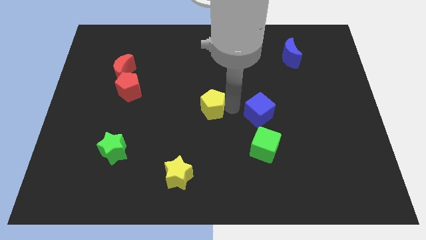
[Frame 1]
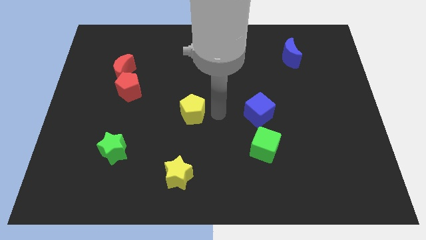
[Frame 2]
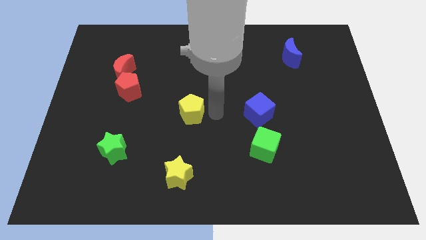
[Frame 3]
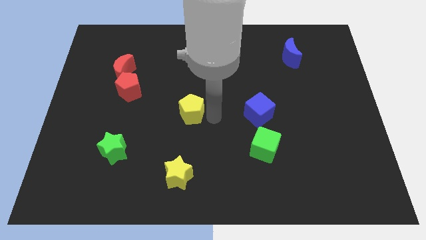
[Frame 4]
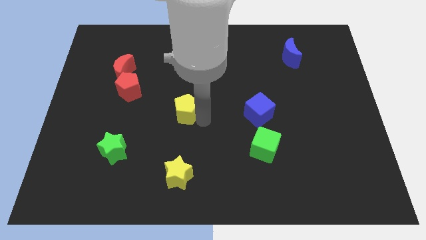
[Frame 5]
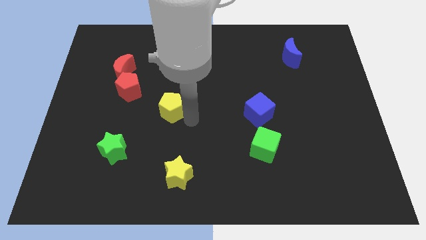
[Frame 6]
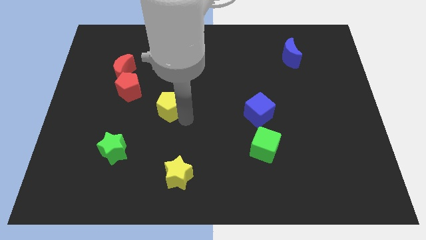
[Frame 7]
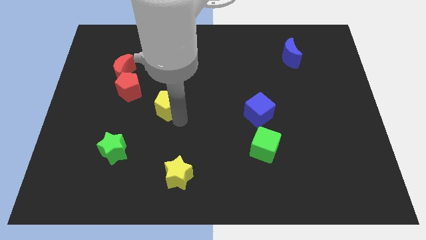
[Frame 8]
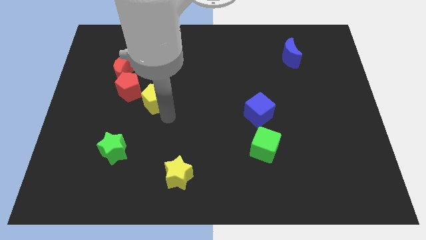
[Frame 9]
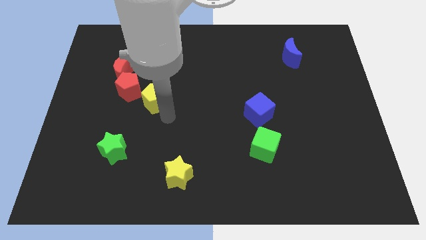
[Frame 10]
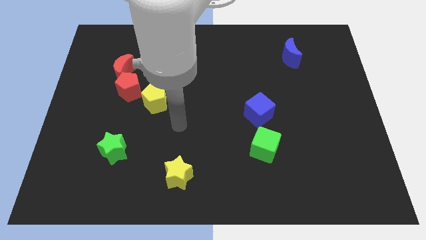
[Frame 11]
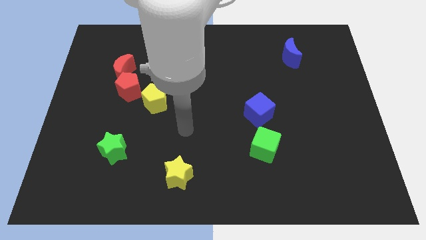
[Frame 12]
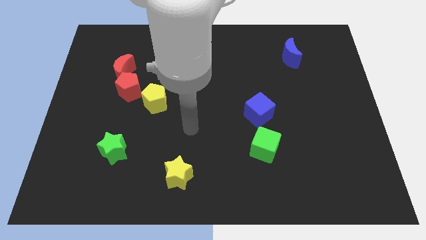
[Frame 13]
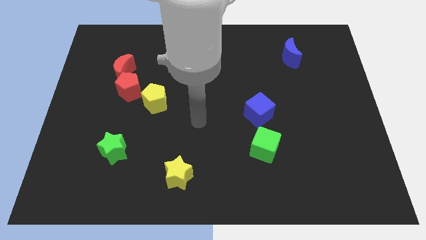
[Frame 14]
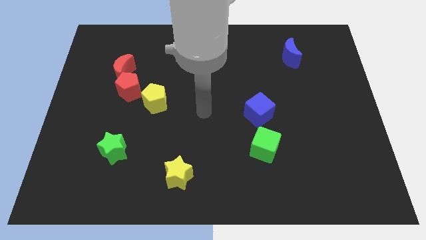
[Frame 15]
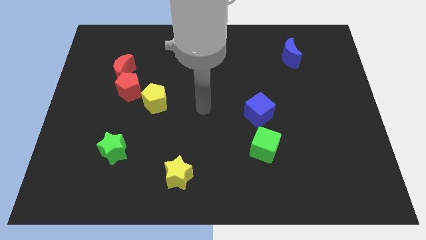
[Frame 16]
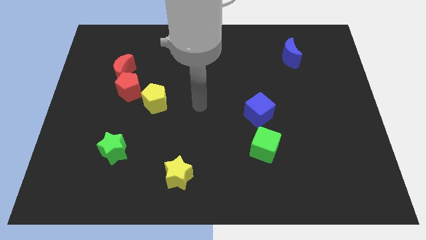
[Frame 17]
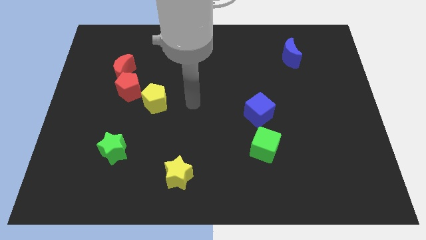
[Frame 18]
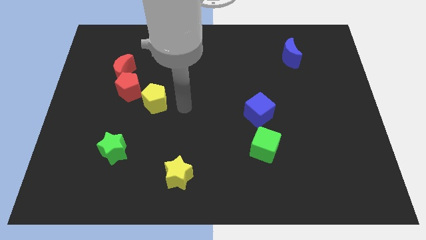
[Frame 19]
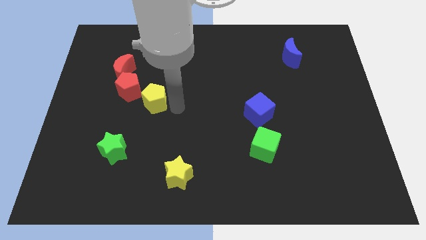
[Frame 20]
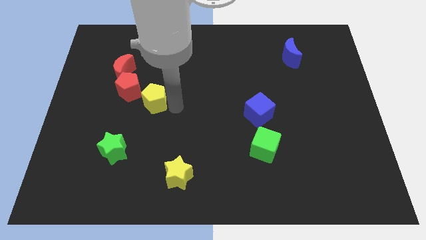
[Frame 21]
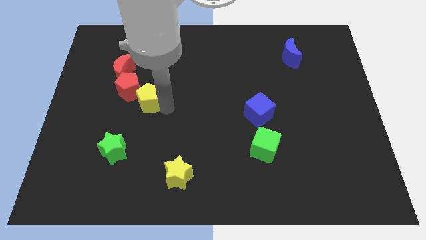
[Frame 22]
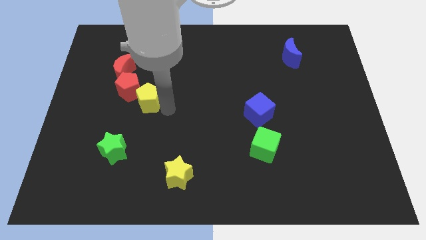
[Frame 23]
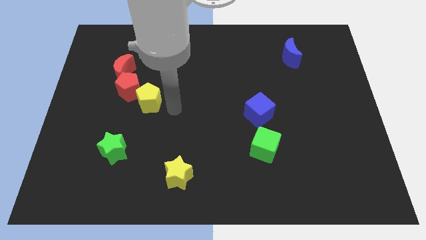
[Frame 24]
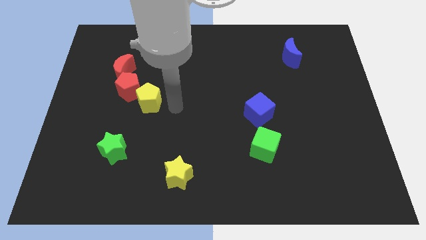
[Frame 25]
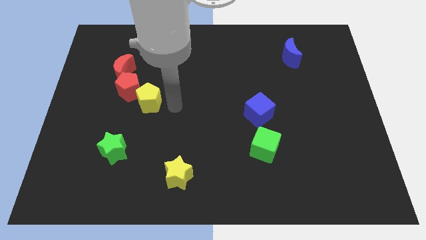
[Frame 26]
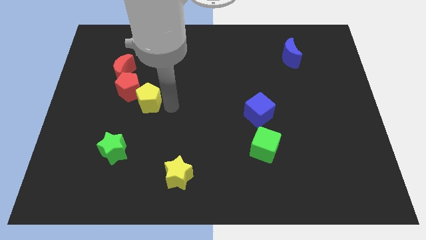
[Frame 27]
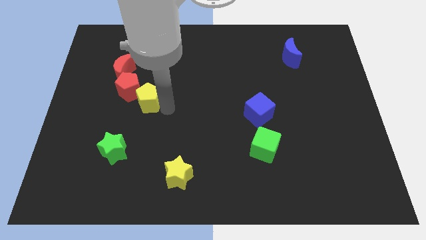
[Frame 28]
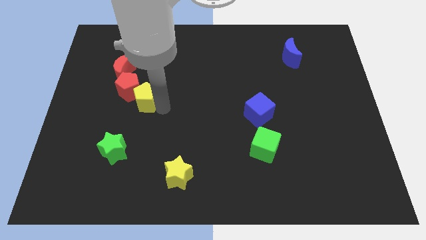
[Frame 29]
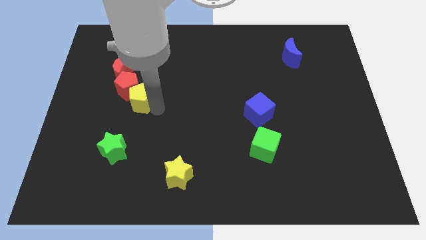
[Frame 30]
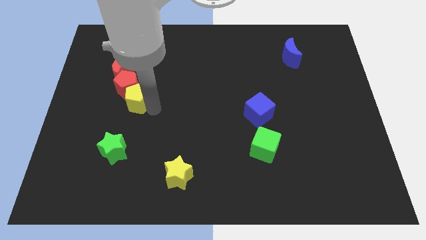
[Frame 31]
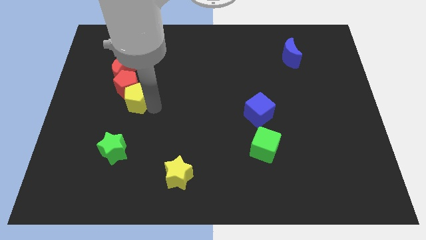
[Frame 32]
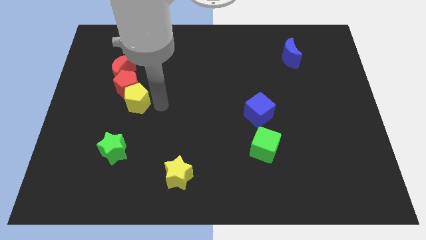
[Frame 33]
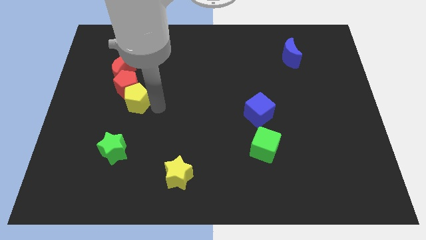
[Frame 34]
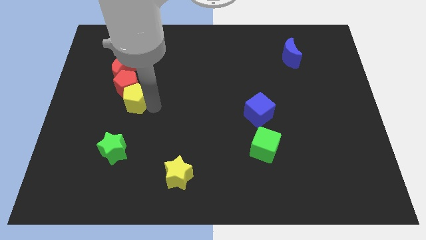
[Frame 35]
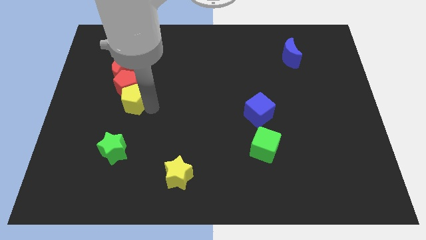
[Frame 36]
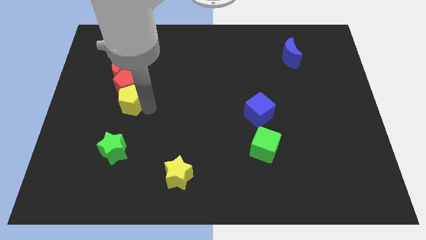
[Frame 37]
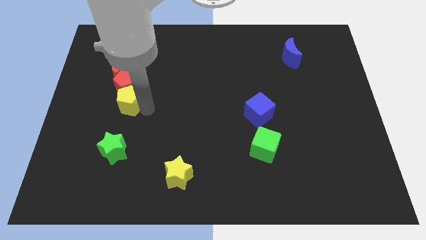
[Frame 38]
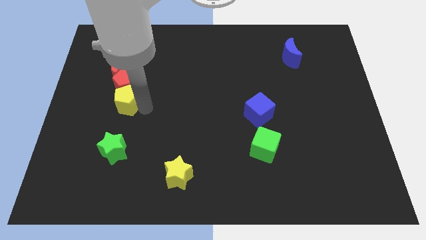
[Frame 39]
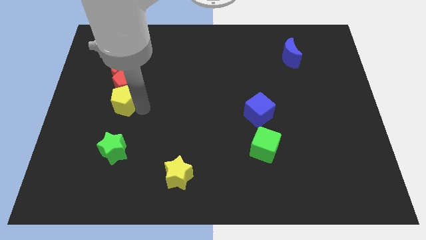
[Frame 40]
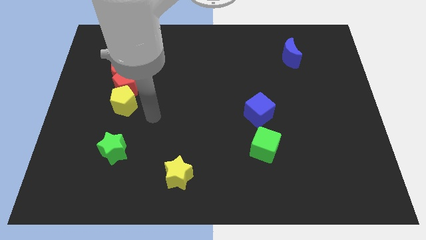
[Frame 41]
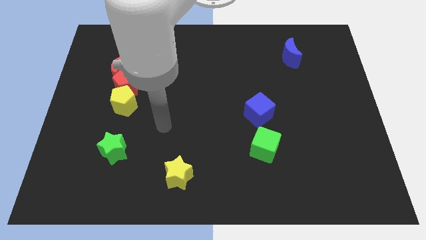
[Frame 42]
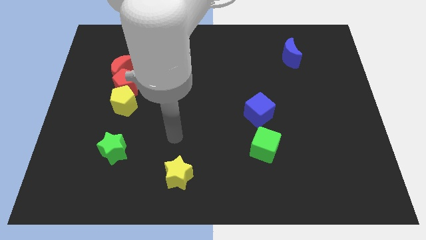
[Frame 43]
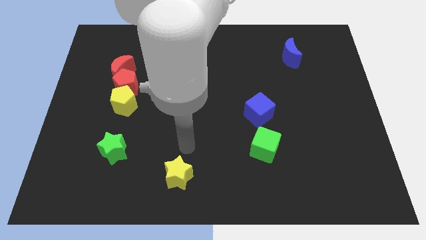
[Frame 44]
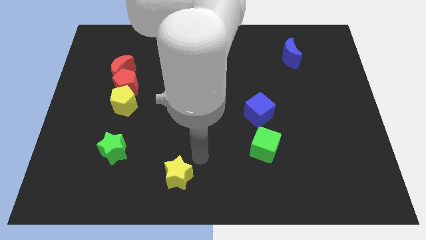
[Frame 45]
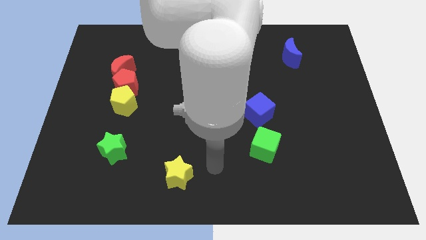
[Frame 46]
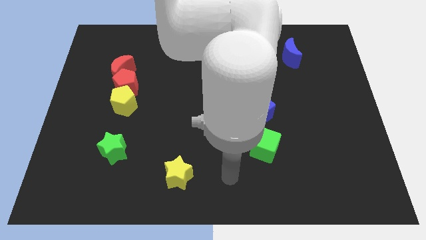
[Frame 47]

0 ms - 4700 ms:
place yellow pentagon into the red pentagon

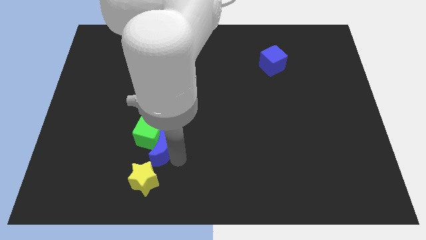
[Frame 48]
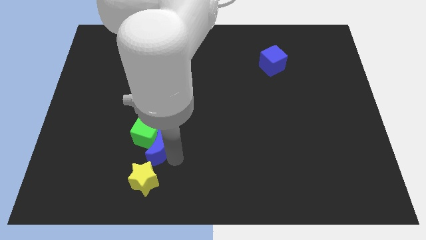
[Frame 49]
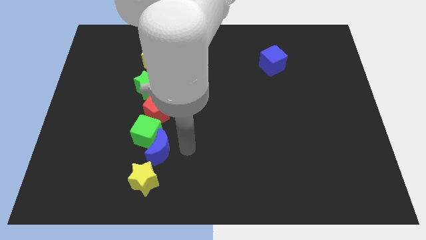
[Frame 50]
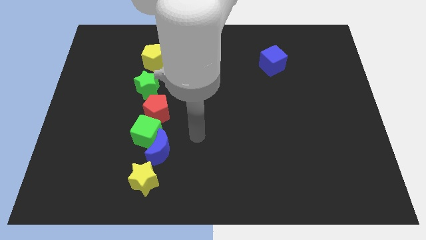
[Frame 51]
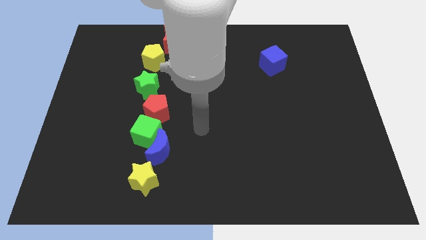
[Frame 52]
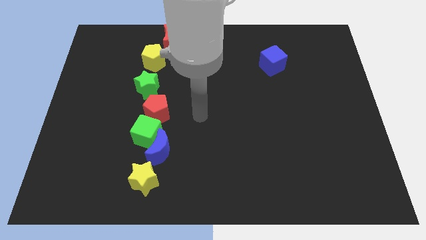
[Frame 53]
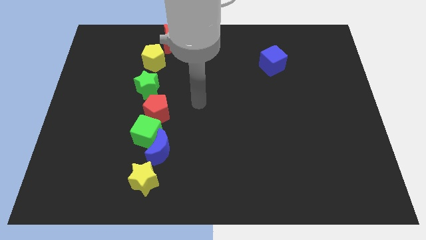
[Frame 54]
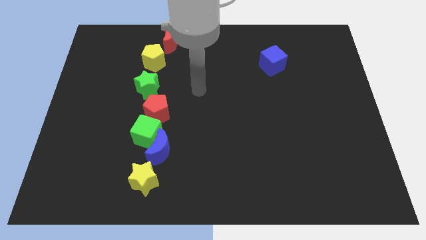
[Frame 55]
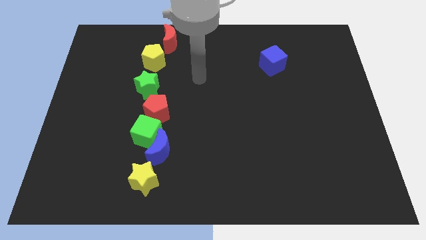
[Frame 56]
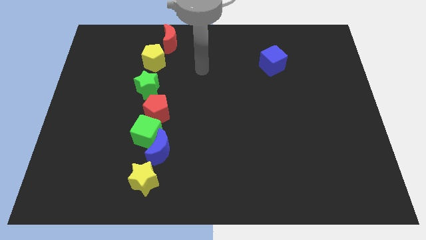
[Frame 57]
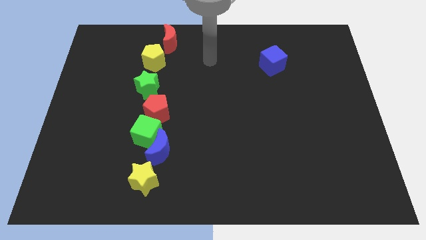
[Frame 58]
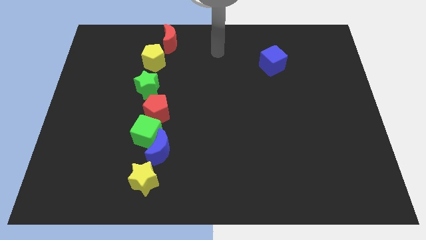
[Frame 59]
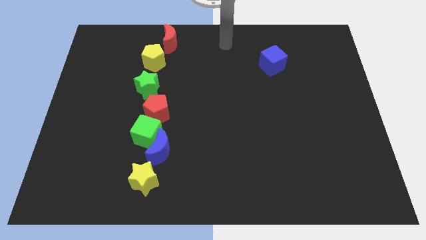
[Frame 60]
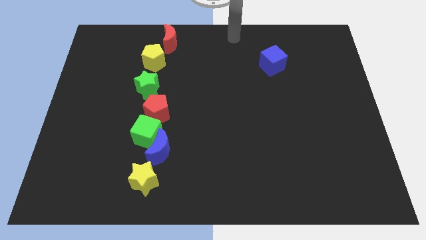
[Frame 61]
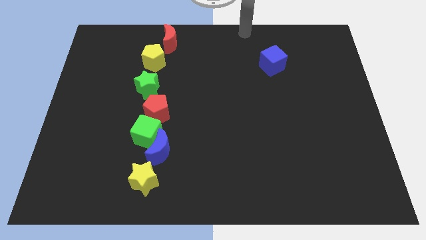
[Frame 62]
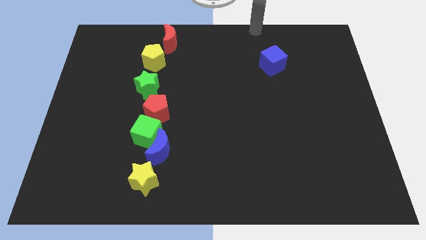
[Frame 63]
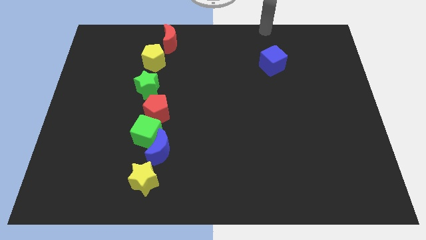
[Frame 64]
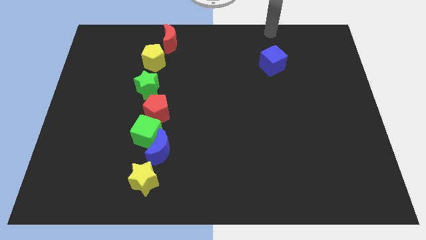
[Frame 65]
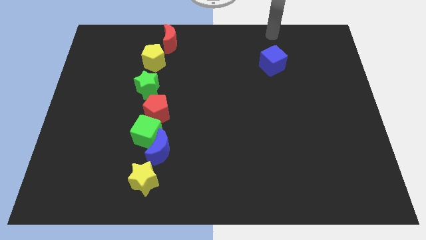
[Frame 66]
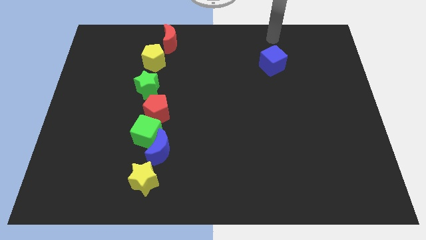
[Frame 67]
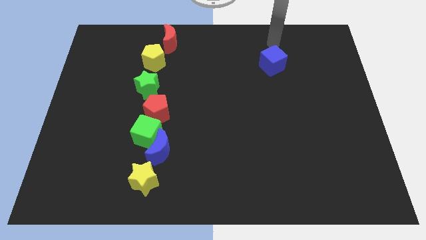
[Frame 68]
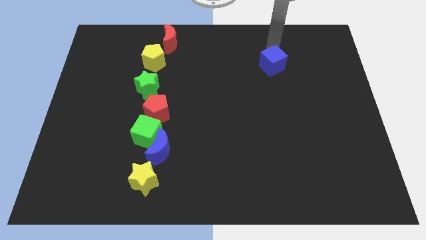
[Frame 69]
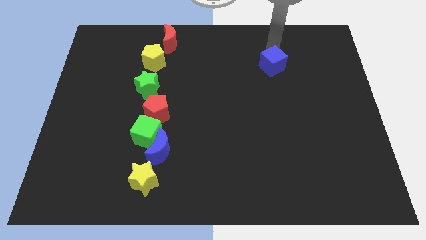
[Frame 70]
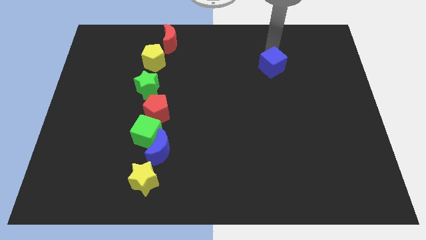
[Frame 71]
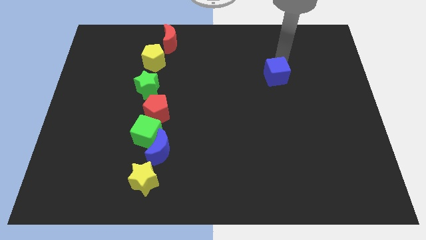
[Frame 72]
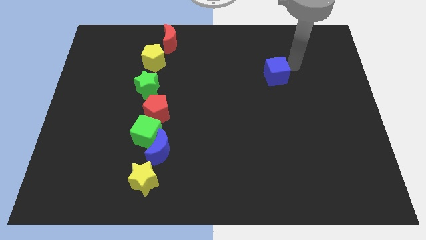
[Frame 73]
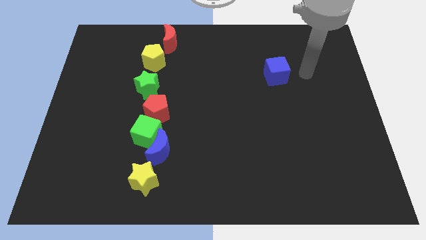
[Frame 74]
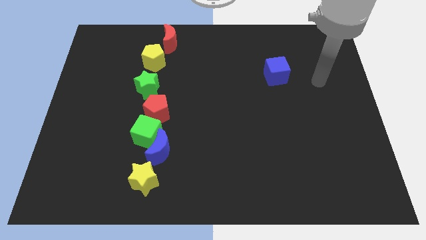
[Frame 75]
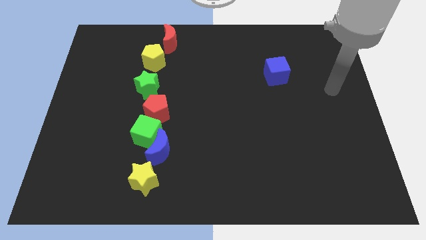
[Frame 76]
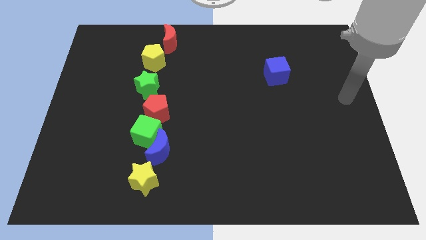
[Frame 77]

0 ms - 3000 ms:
push the blue cube slightly to the bottom

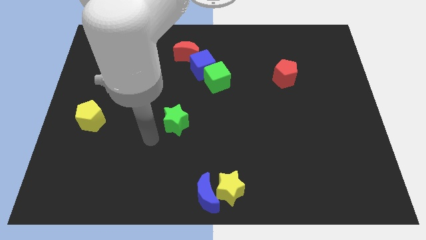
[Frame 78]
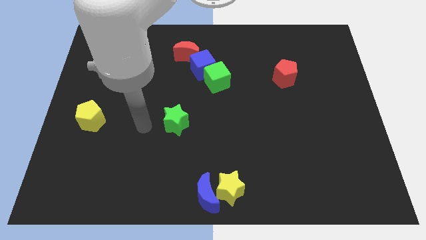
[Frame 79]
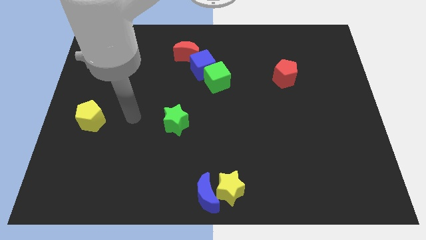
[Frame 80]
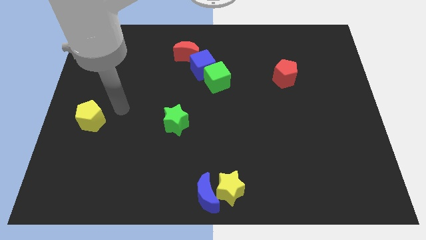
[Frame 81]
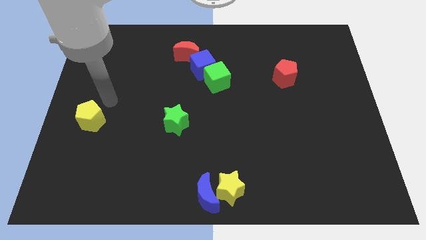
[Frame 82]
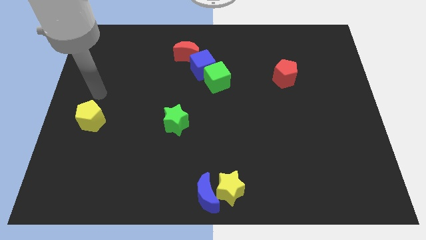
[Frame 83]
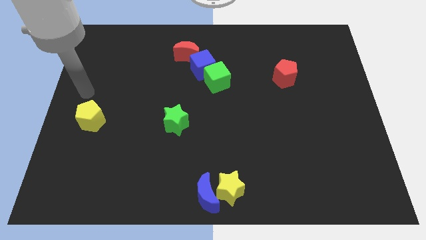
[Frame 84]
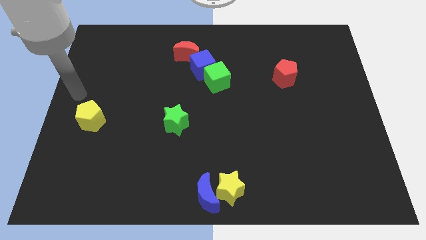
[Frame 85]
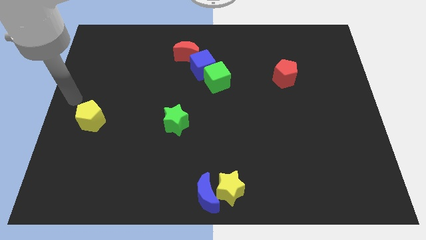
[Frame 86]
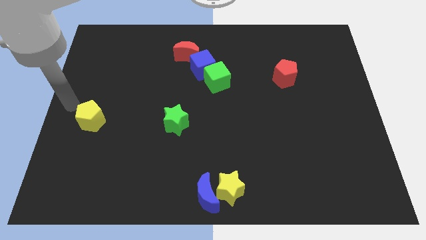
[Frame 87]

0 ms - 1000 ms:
place your arm at the center left side of the board

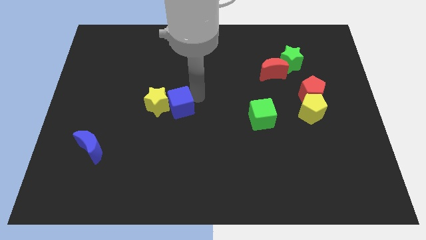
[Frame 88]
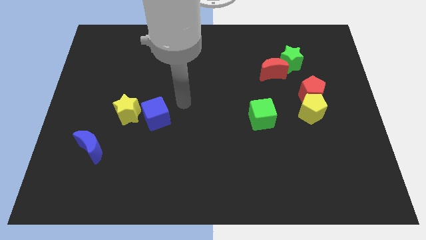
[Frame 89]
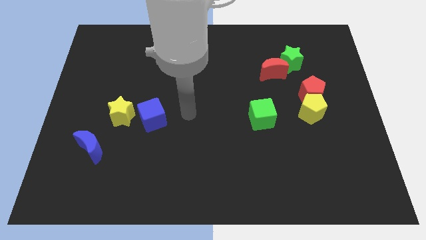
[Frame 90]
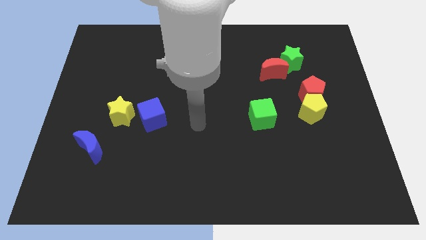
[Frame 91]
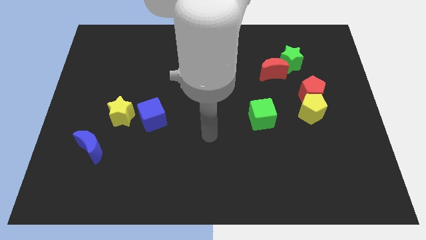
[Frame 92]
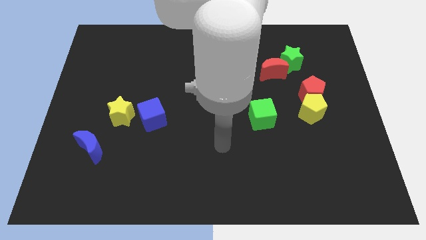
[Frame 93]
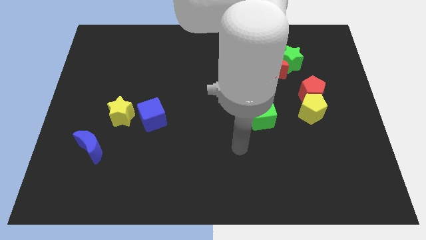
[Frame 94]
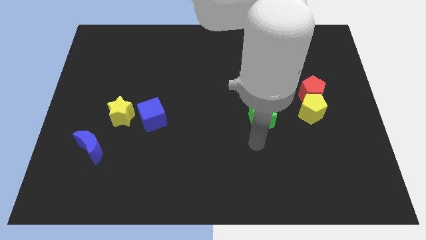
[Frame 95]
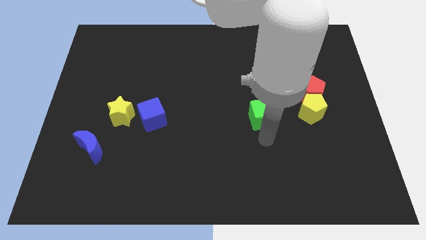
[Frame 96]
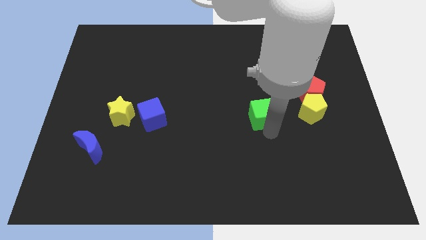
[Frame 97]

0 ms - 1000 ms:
place the arm below the green cube
